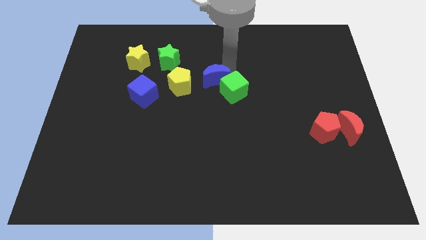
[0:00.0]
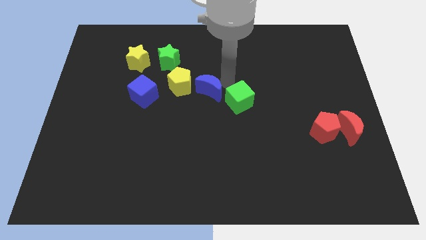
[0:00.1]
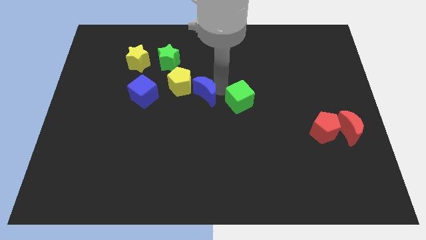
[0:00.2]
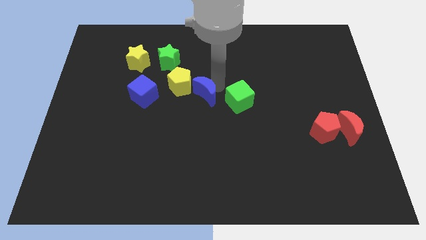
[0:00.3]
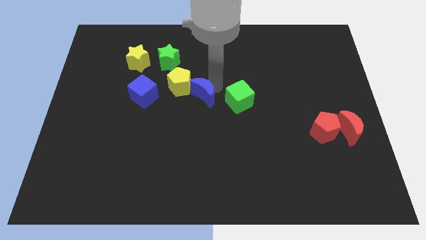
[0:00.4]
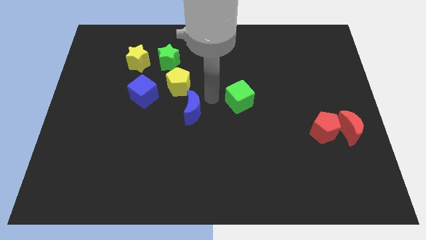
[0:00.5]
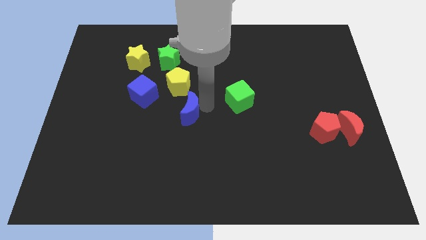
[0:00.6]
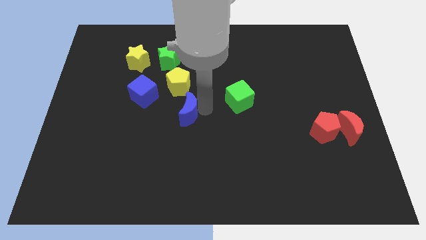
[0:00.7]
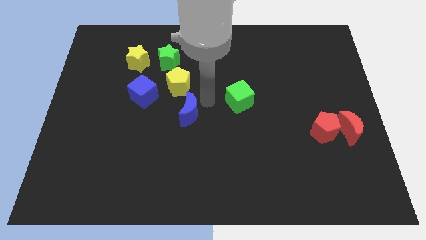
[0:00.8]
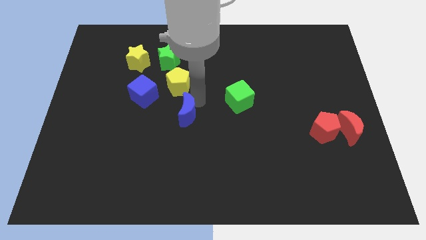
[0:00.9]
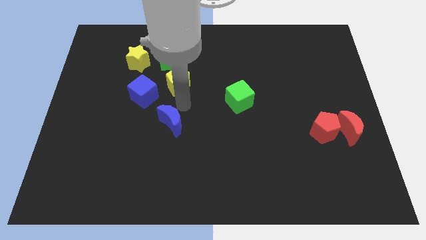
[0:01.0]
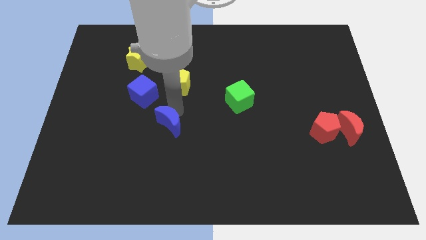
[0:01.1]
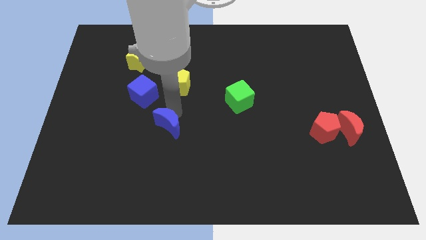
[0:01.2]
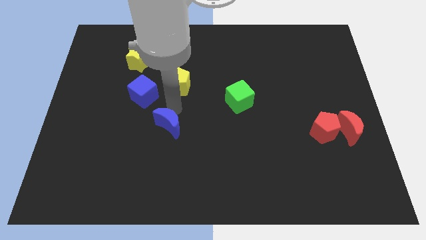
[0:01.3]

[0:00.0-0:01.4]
separate blue crescent from the green cube

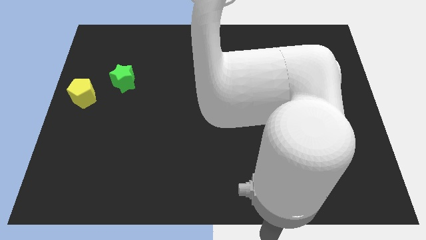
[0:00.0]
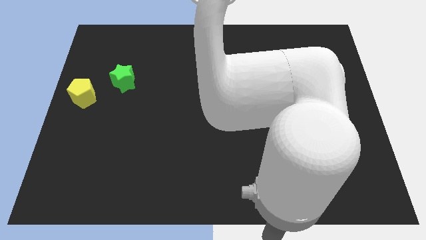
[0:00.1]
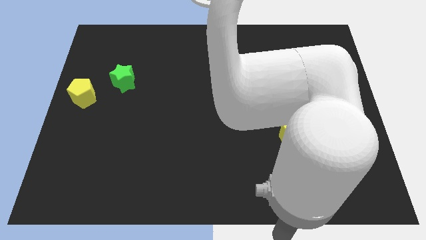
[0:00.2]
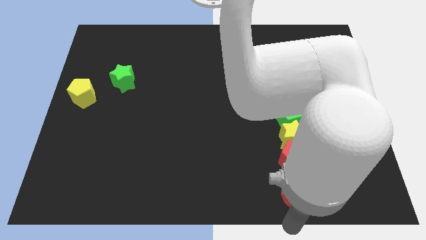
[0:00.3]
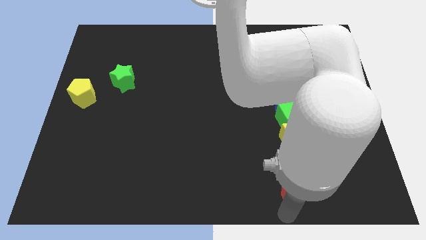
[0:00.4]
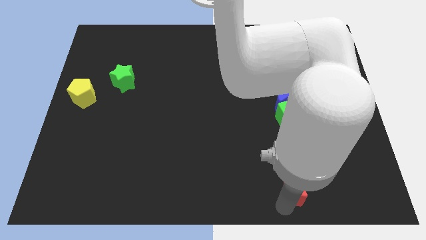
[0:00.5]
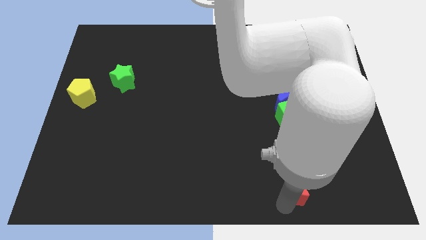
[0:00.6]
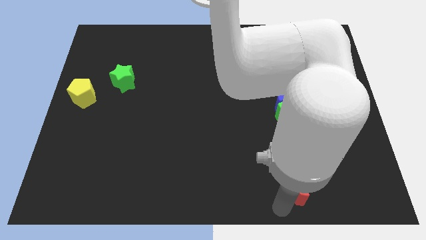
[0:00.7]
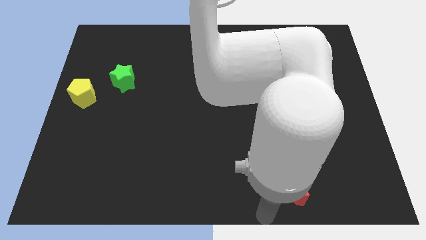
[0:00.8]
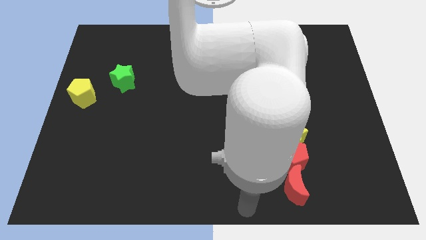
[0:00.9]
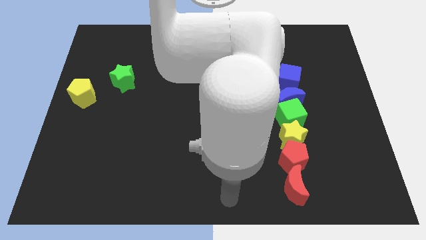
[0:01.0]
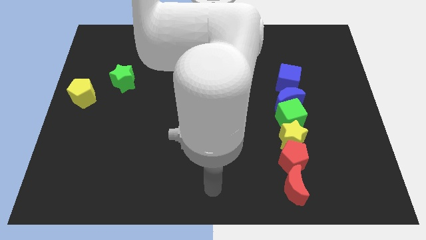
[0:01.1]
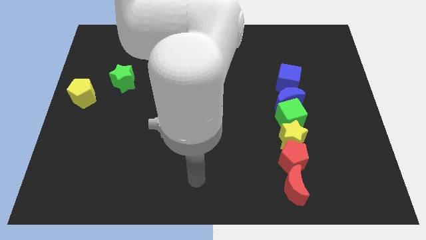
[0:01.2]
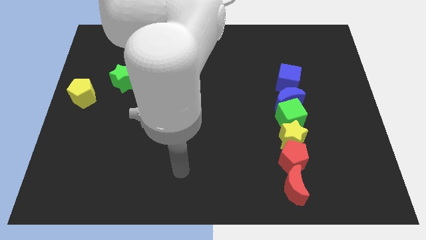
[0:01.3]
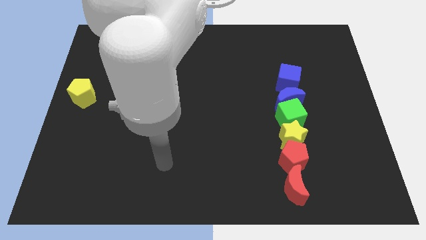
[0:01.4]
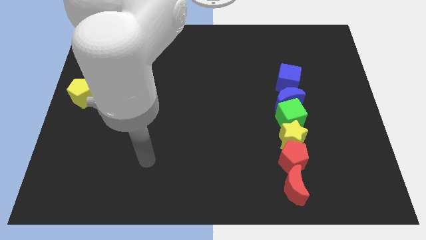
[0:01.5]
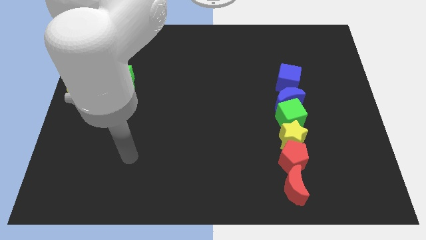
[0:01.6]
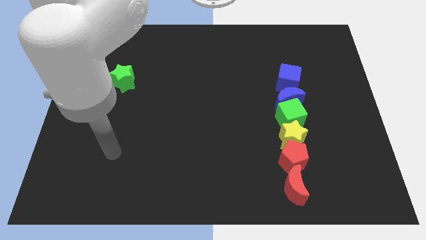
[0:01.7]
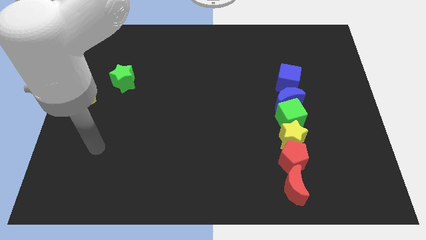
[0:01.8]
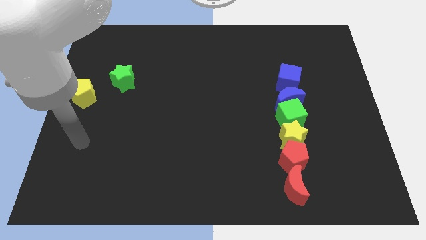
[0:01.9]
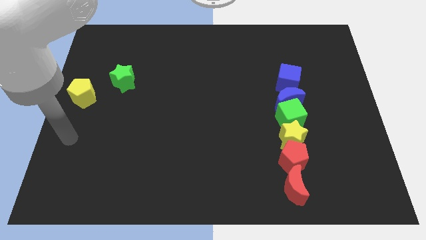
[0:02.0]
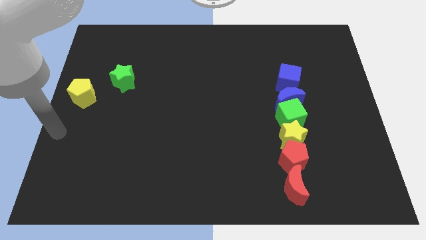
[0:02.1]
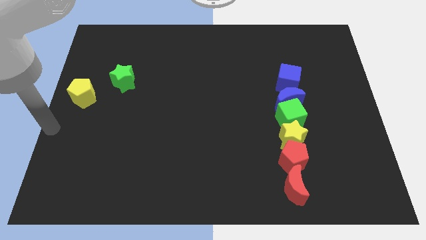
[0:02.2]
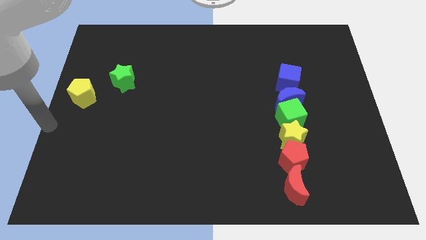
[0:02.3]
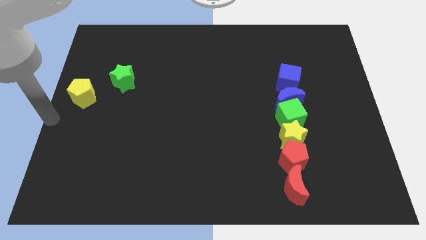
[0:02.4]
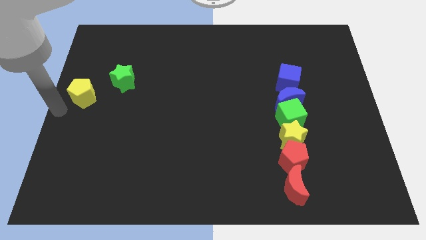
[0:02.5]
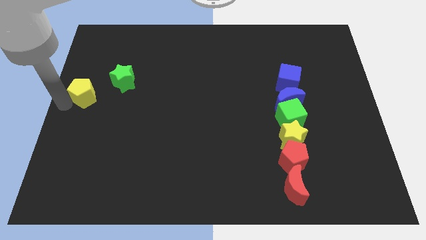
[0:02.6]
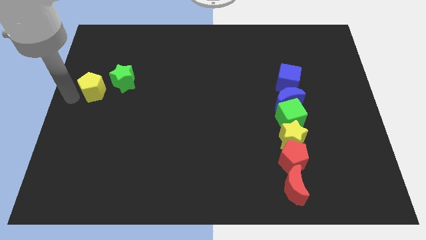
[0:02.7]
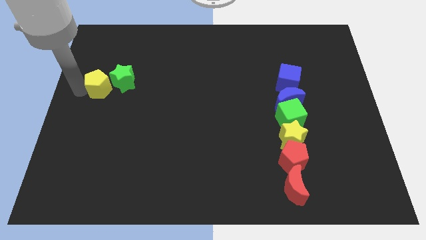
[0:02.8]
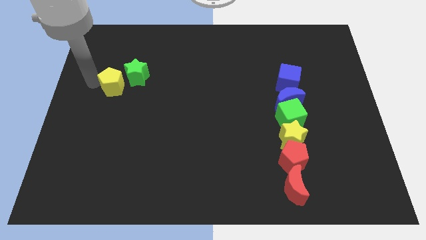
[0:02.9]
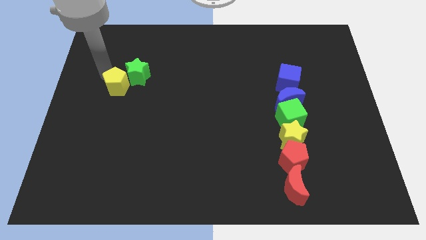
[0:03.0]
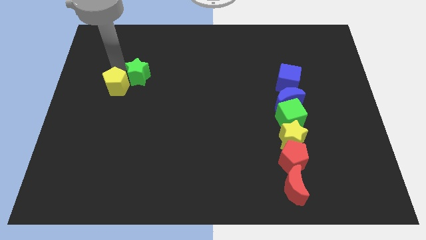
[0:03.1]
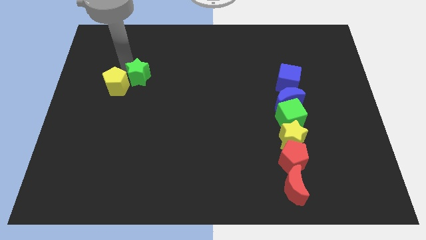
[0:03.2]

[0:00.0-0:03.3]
make the yellow pentagon to touch the green star

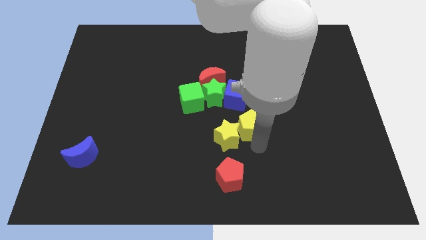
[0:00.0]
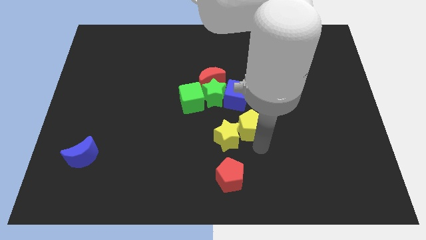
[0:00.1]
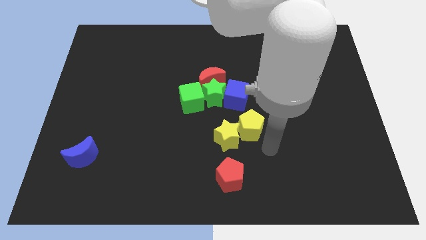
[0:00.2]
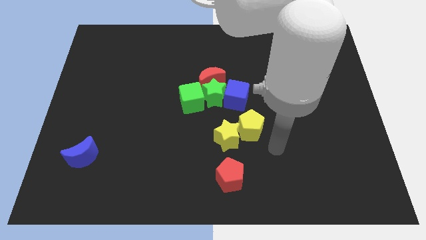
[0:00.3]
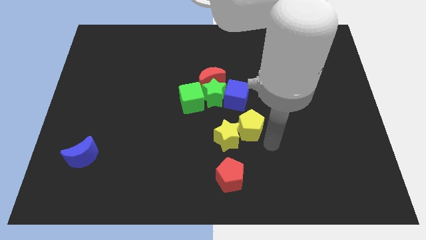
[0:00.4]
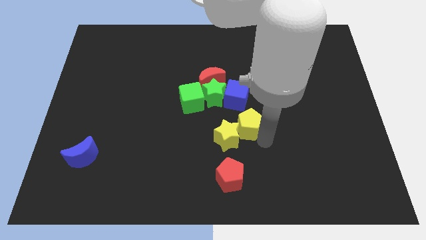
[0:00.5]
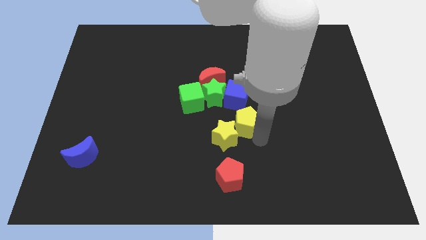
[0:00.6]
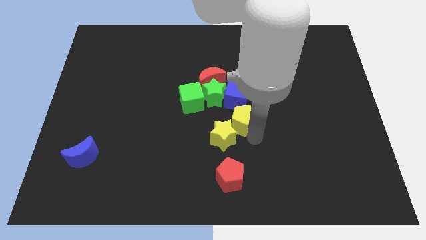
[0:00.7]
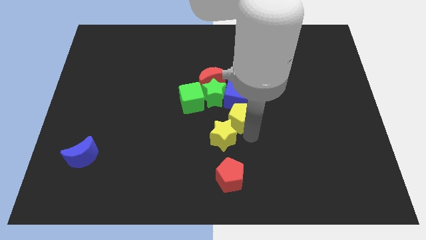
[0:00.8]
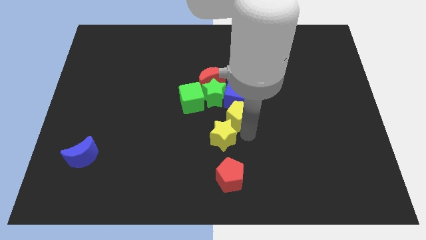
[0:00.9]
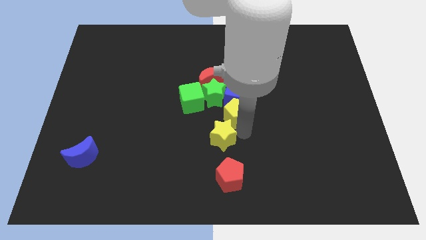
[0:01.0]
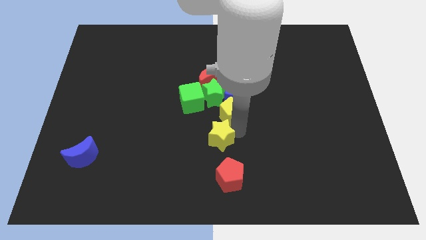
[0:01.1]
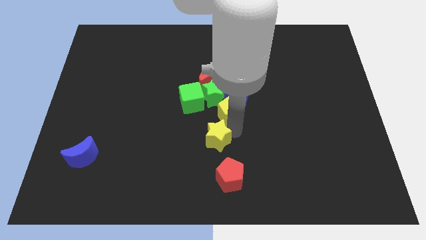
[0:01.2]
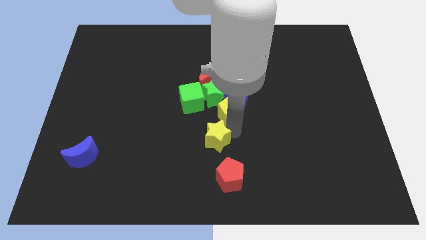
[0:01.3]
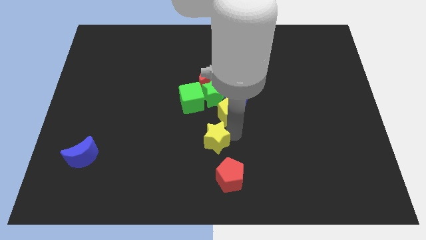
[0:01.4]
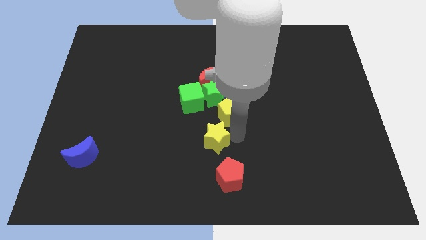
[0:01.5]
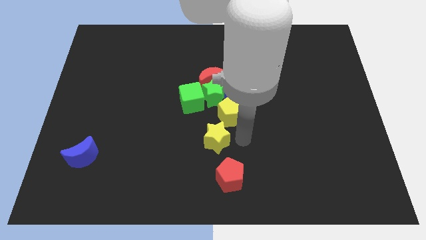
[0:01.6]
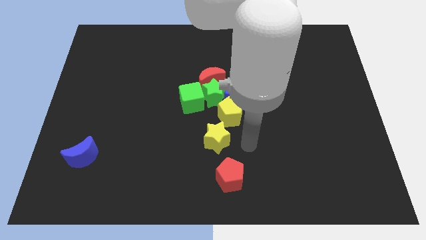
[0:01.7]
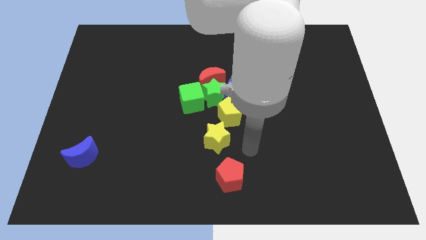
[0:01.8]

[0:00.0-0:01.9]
push yellow pentagon below the blue cube to the middle of the board

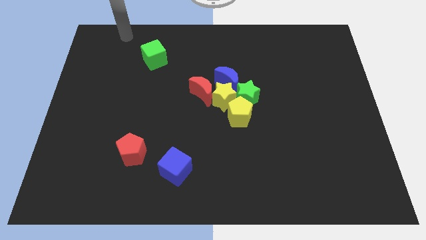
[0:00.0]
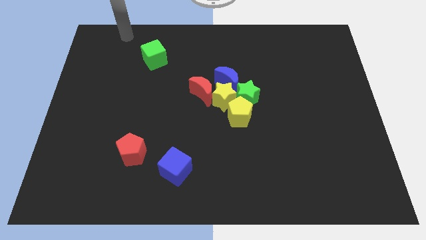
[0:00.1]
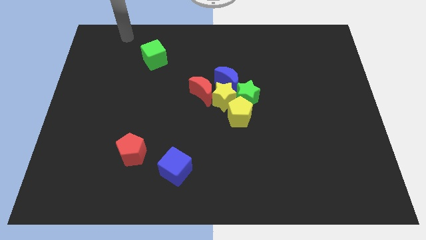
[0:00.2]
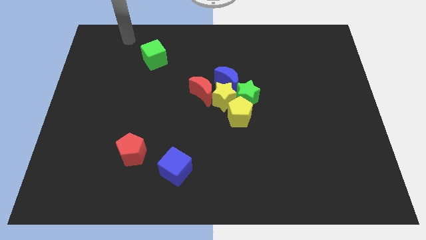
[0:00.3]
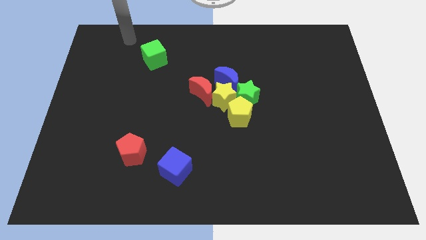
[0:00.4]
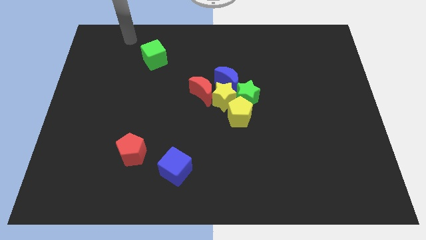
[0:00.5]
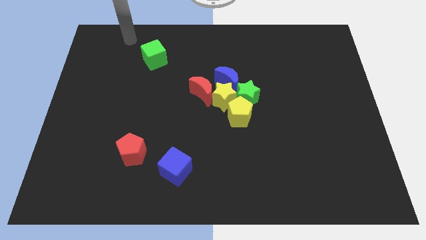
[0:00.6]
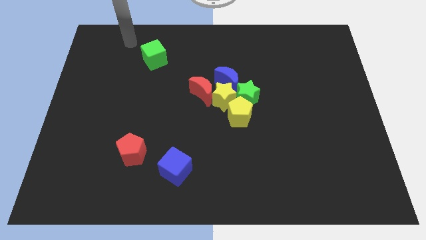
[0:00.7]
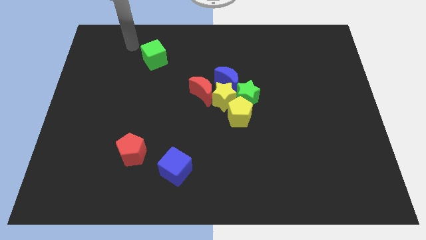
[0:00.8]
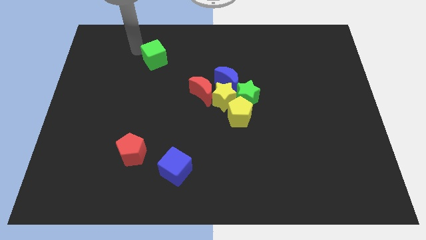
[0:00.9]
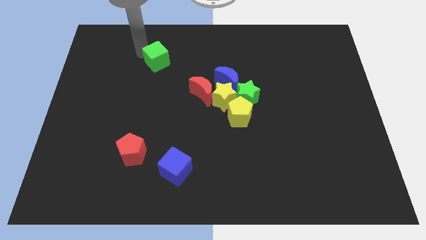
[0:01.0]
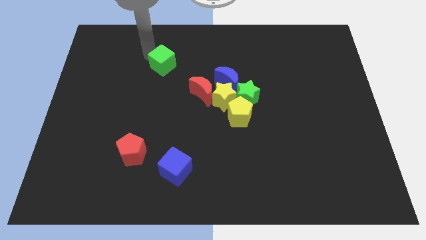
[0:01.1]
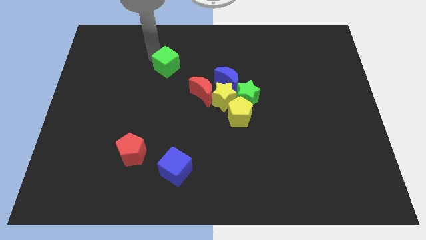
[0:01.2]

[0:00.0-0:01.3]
touch the top of the green cube

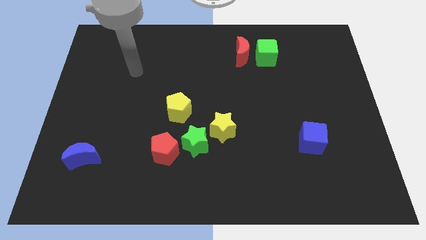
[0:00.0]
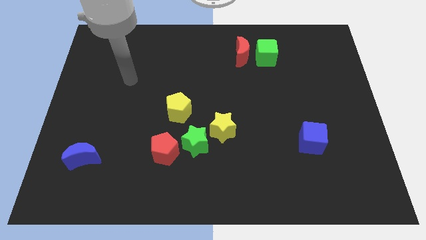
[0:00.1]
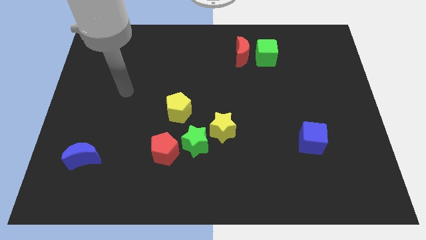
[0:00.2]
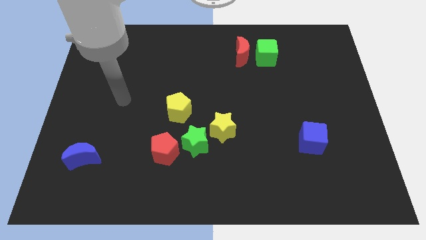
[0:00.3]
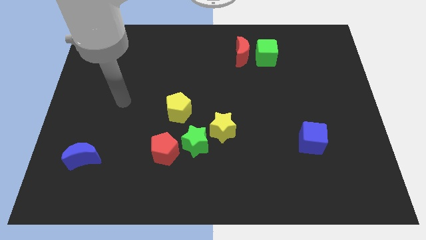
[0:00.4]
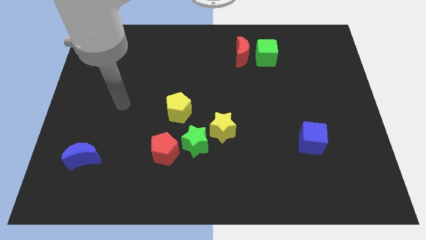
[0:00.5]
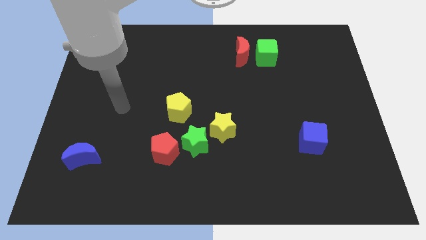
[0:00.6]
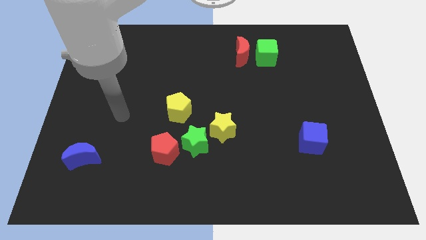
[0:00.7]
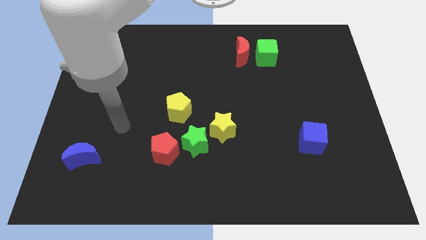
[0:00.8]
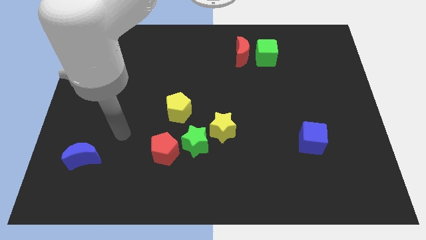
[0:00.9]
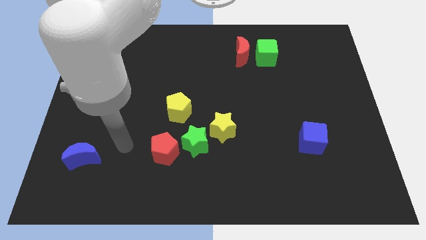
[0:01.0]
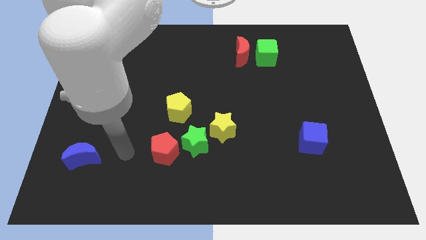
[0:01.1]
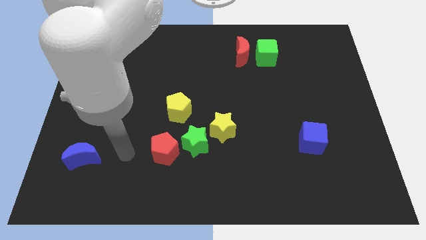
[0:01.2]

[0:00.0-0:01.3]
move the arm to the centre of red pentagon and blue crescent
